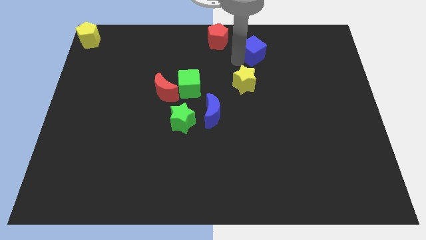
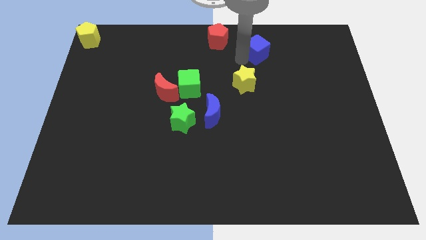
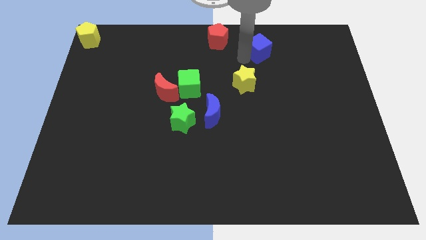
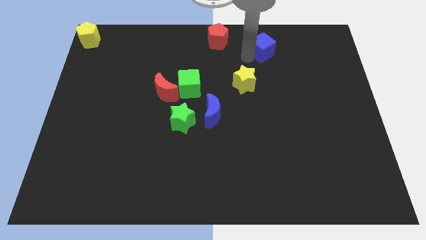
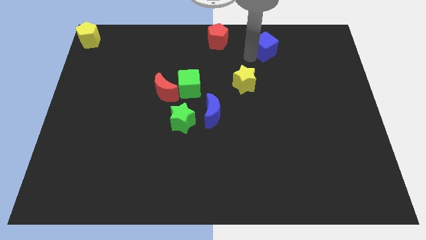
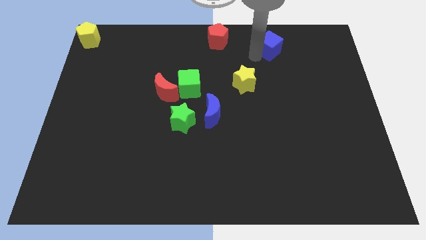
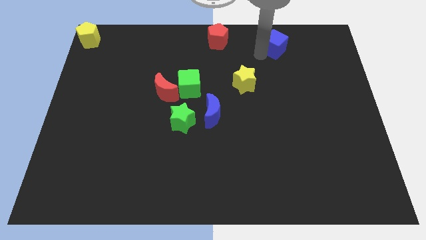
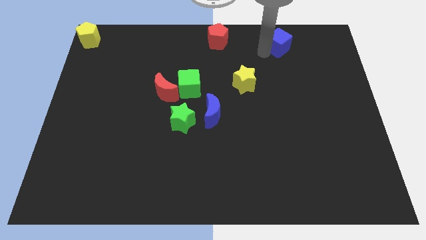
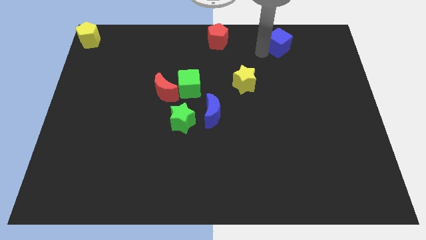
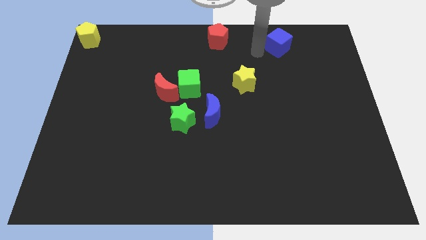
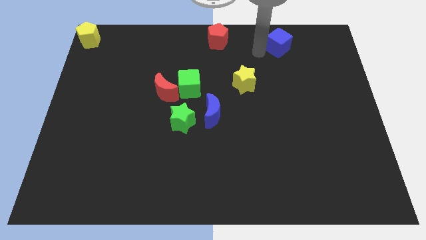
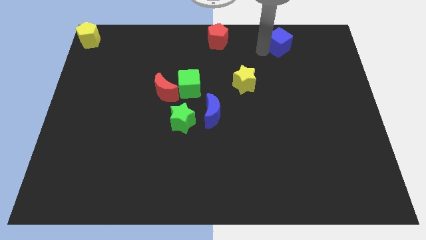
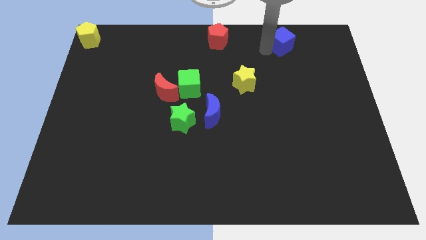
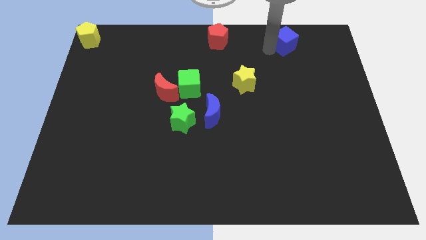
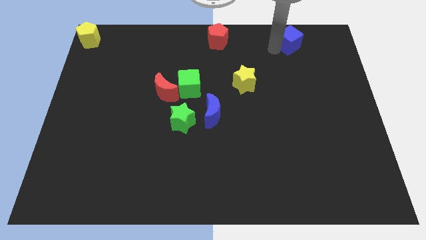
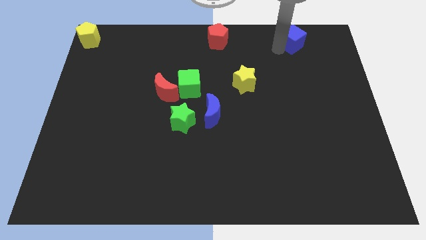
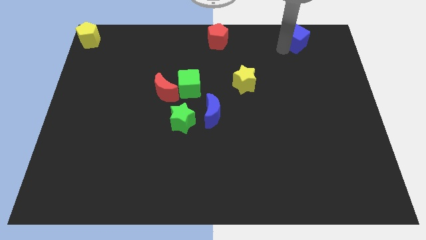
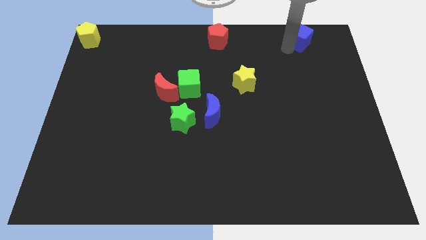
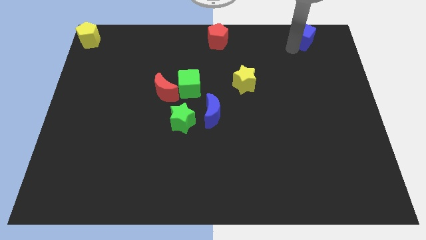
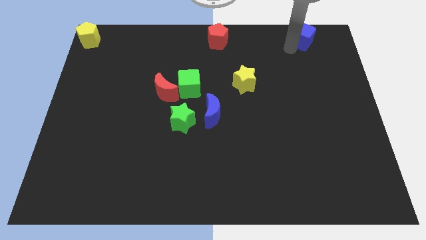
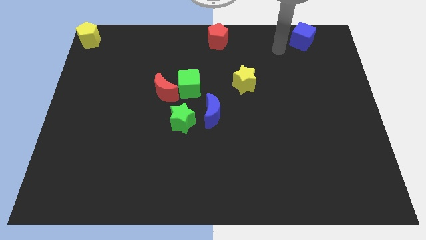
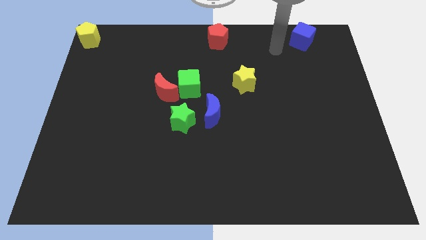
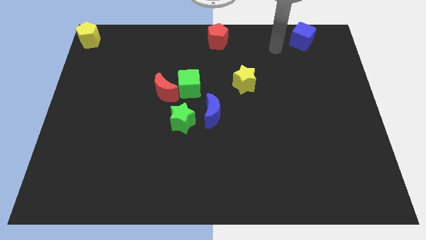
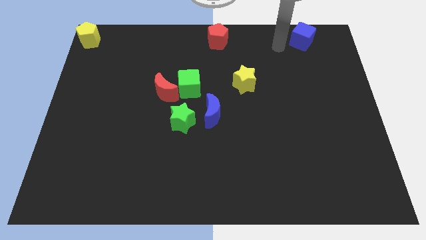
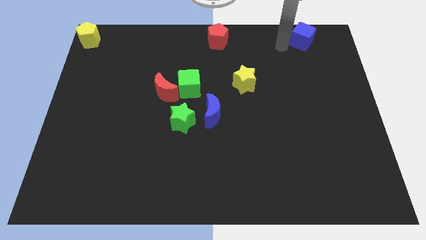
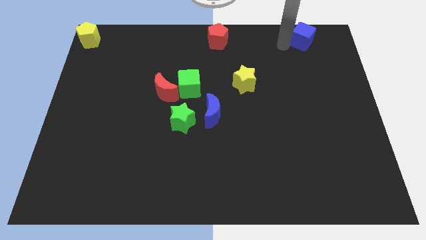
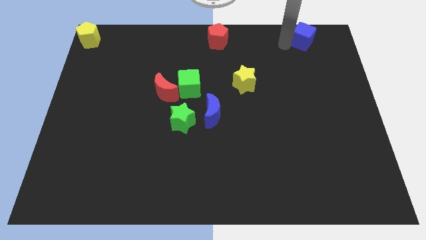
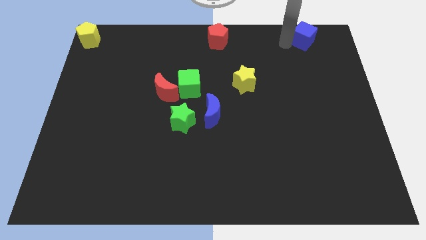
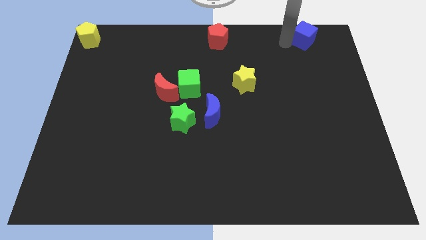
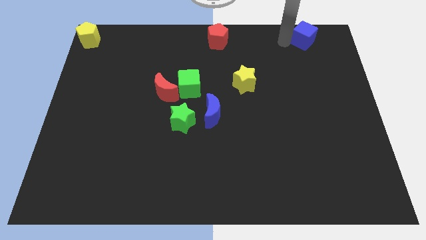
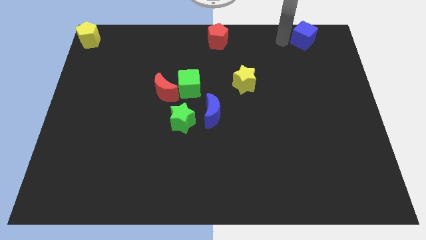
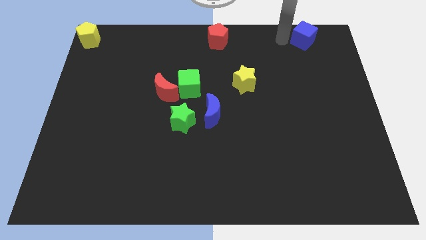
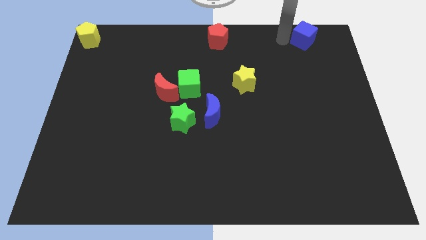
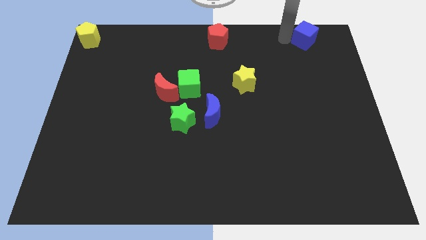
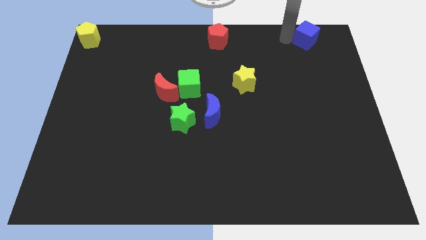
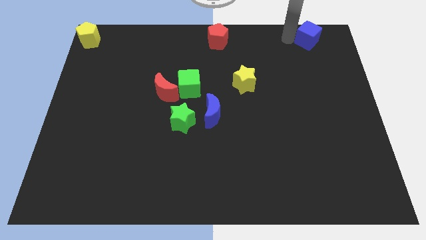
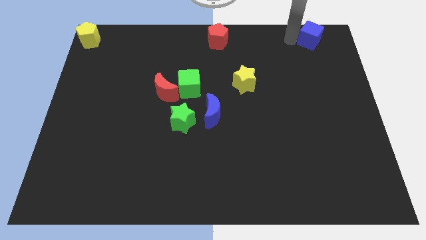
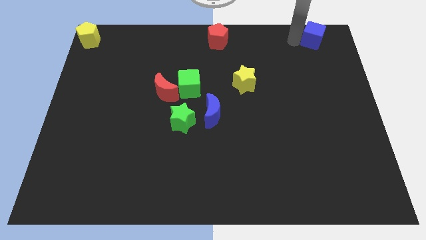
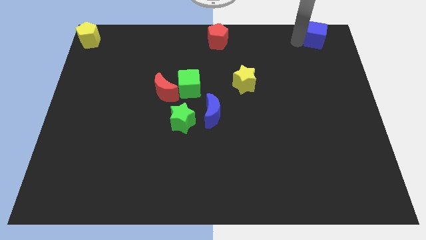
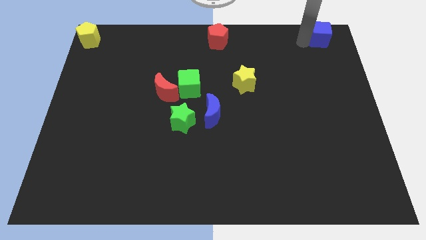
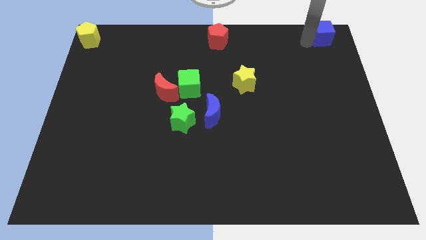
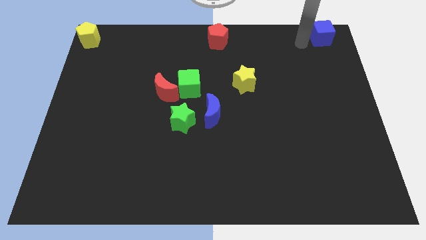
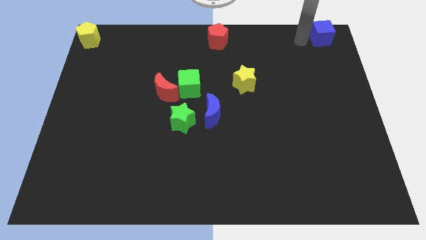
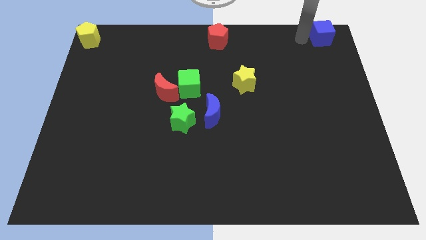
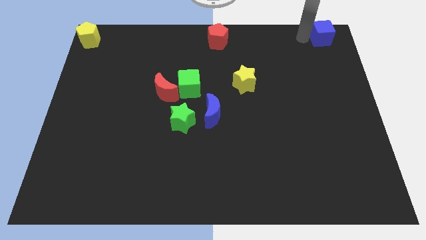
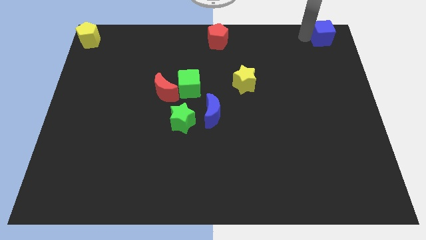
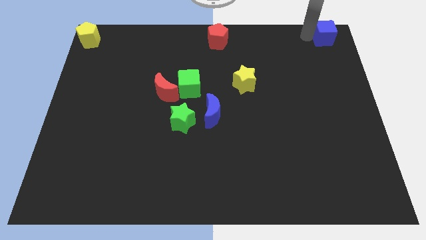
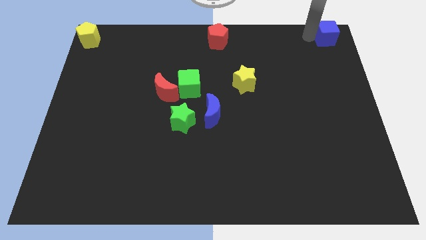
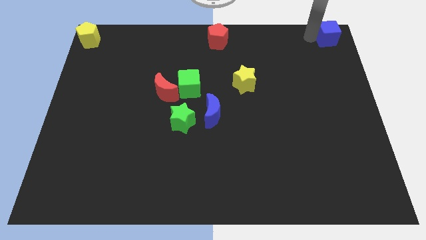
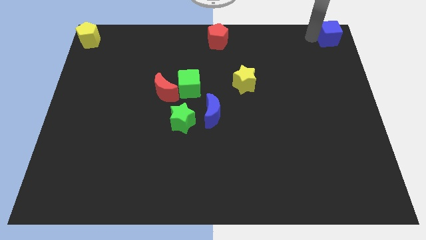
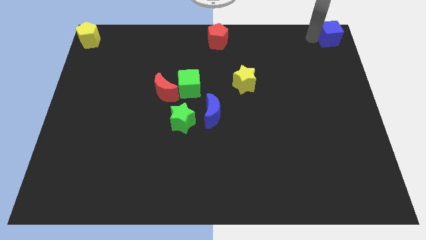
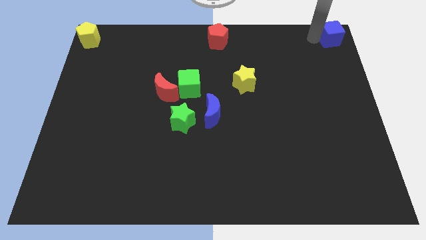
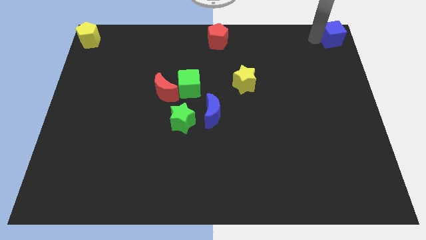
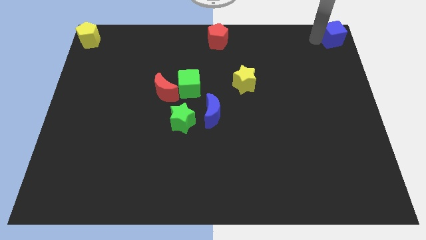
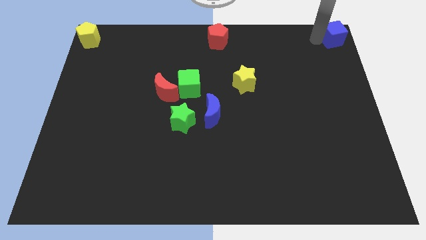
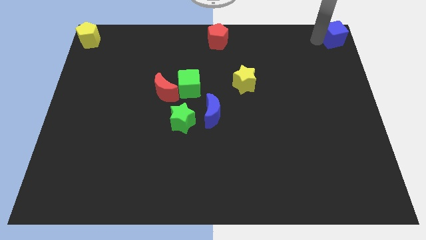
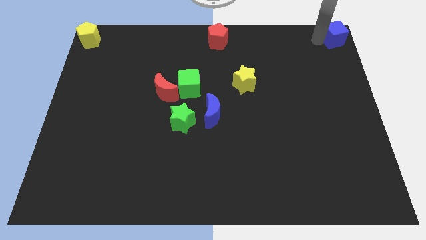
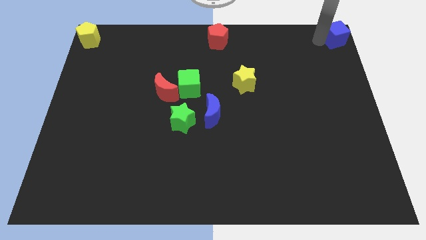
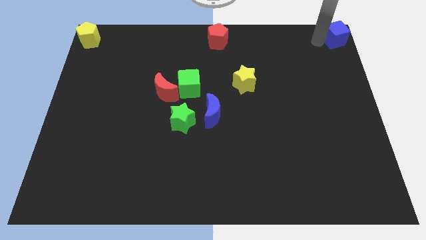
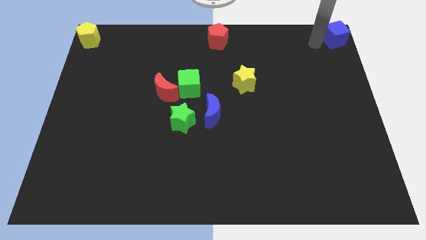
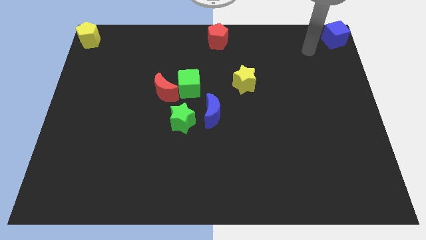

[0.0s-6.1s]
place blue cube in the top right corner

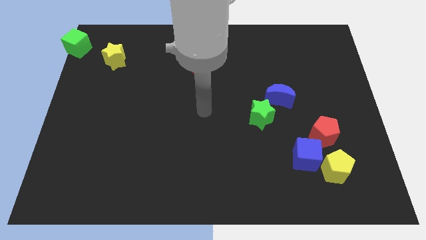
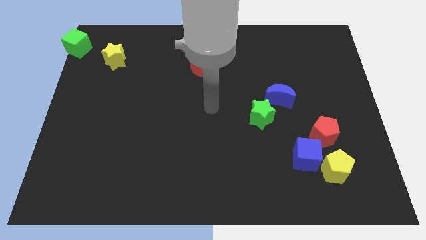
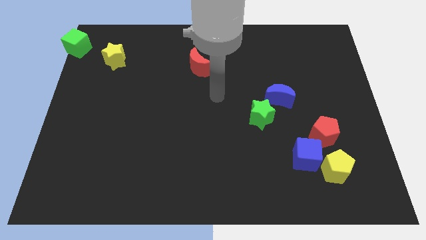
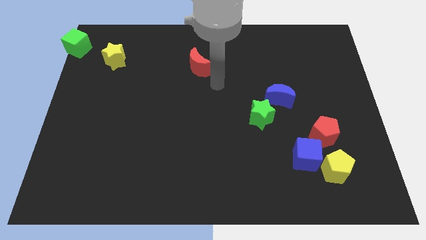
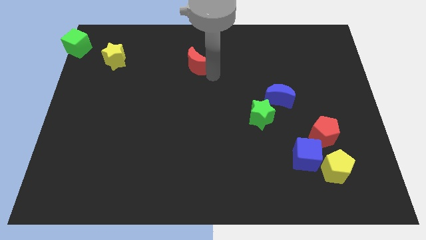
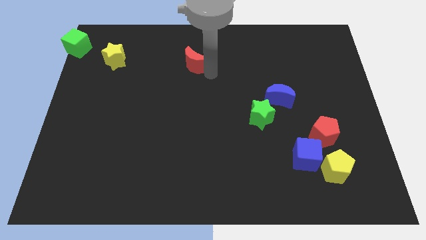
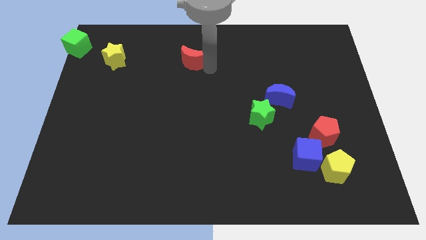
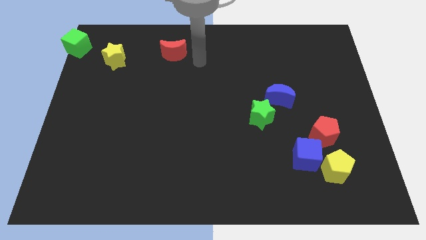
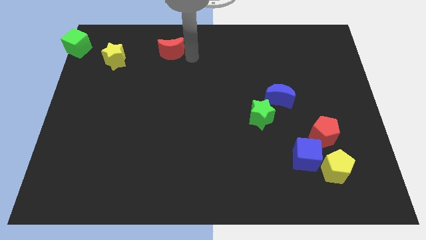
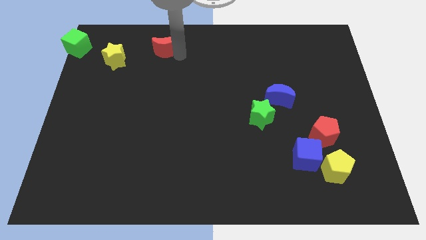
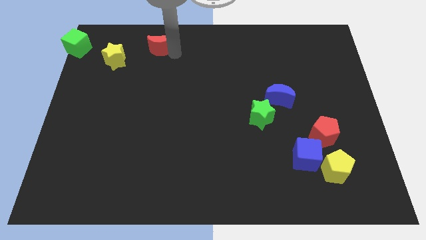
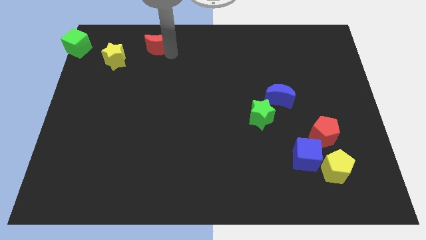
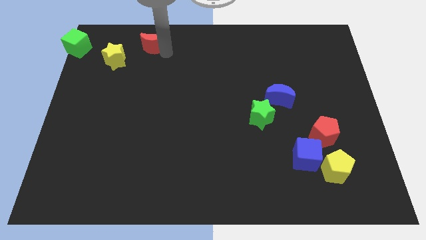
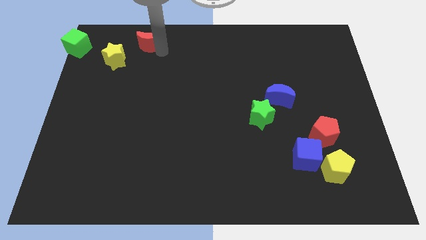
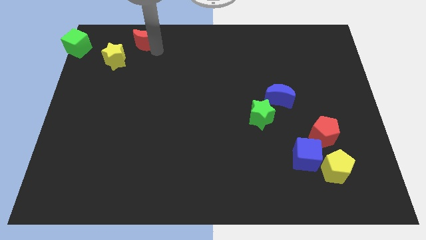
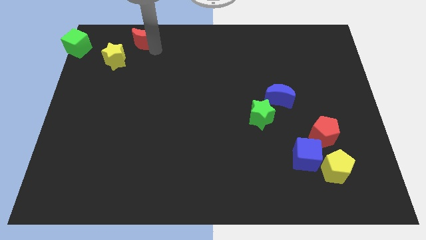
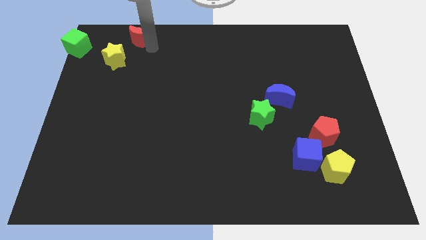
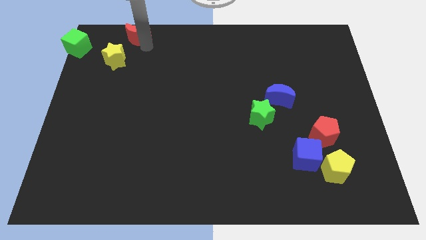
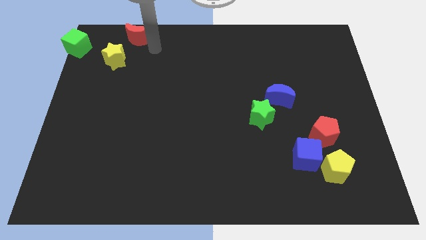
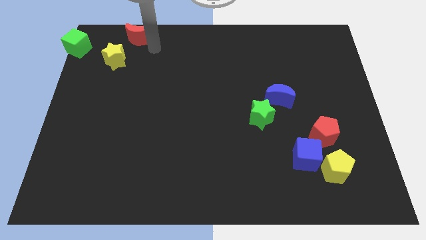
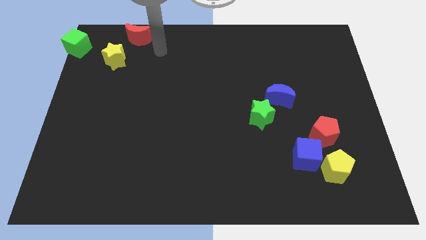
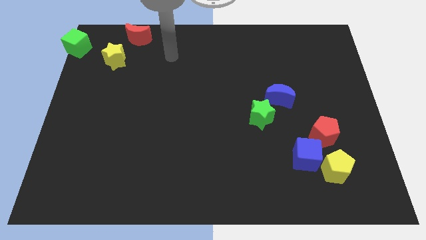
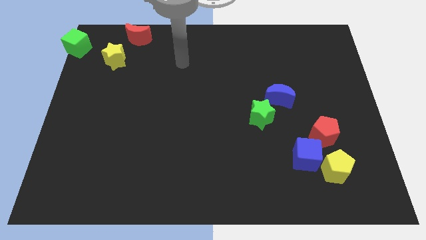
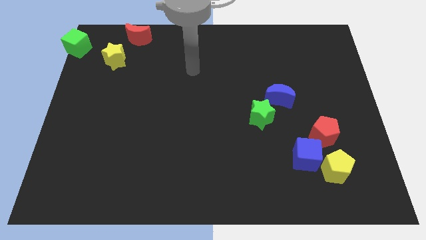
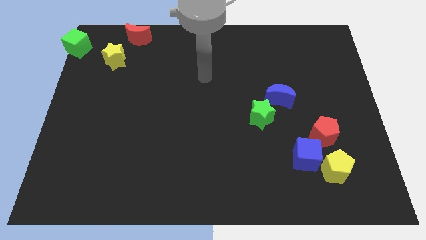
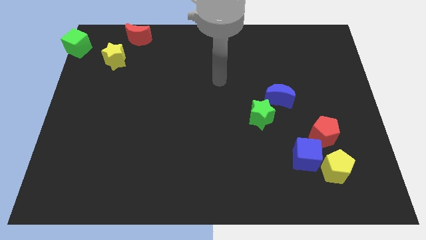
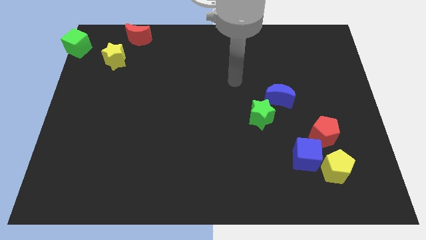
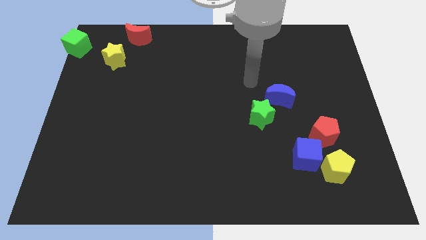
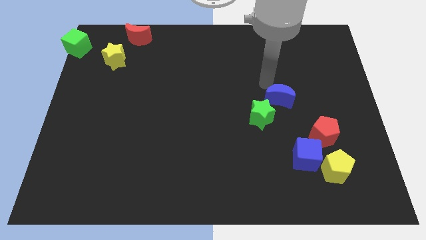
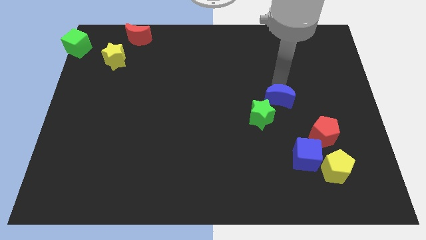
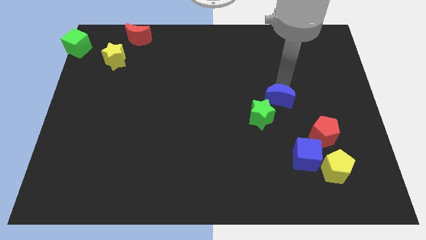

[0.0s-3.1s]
move the red moon to the top right side of the yellow star
